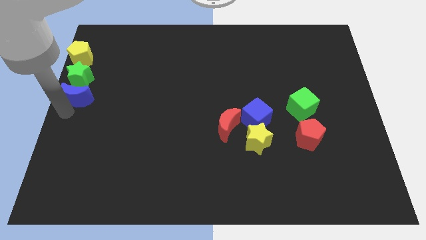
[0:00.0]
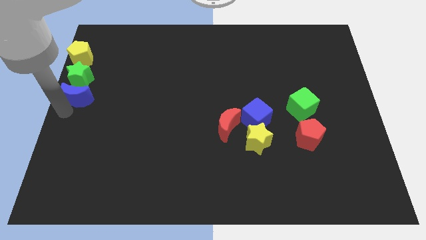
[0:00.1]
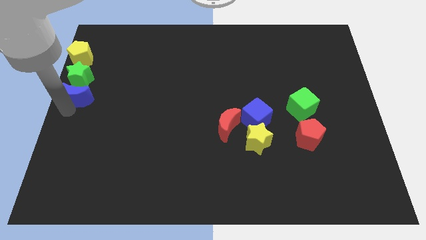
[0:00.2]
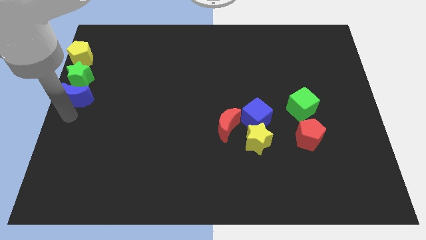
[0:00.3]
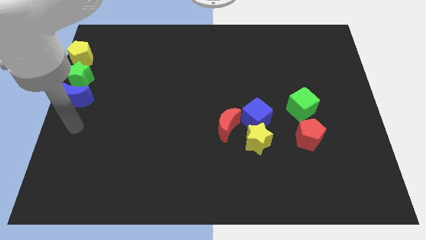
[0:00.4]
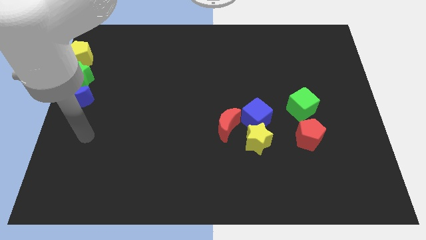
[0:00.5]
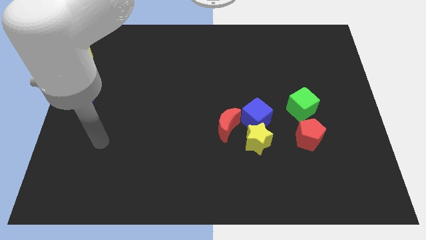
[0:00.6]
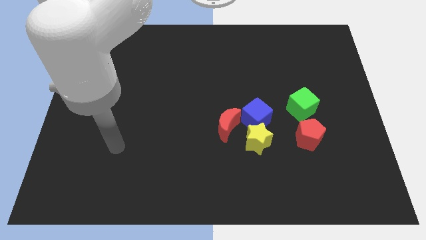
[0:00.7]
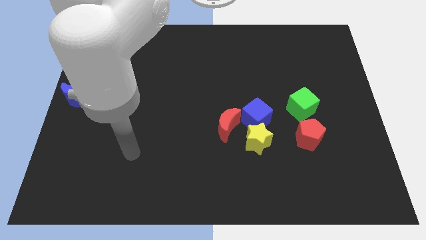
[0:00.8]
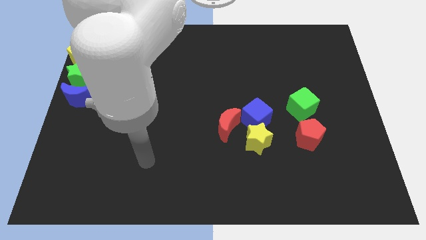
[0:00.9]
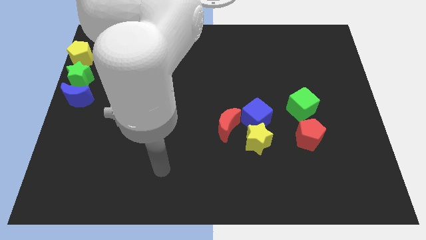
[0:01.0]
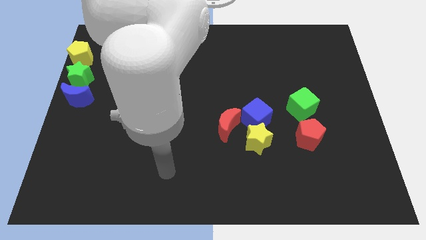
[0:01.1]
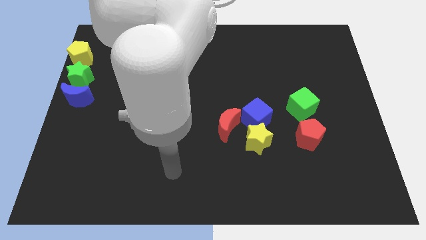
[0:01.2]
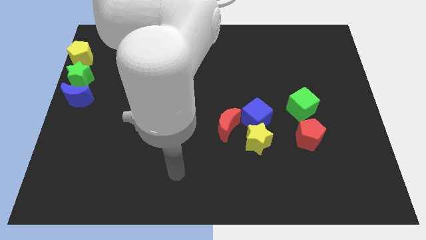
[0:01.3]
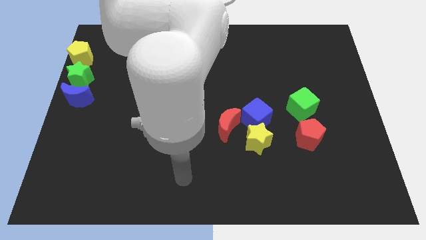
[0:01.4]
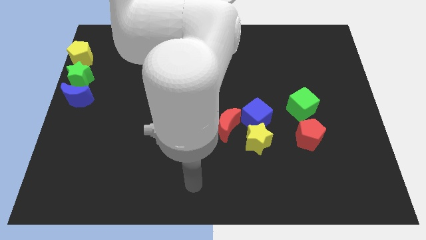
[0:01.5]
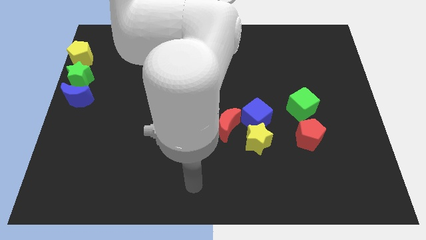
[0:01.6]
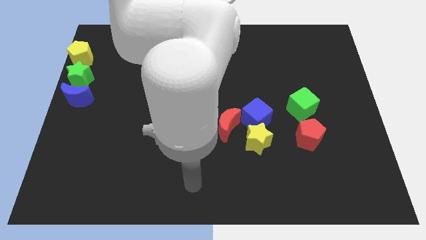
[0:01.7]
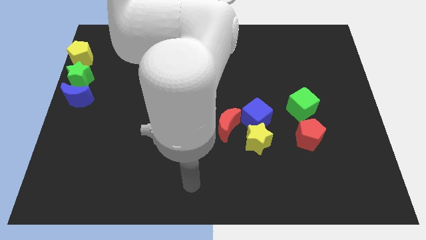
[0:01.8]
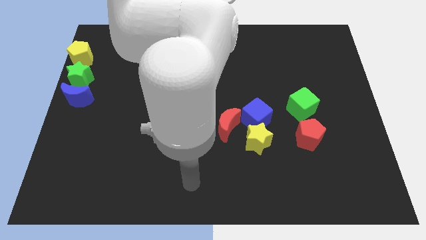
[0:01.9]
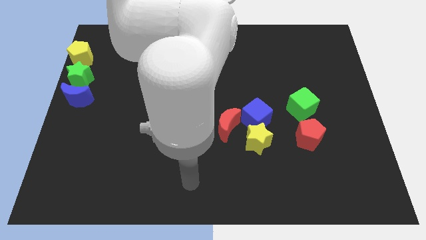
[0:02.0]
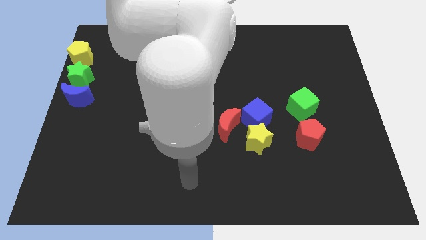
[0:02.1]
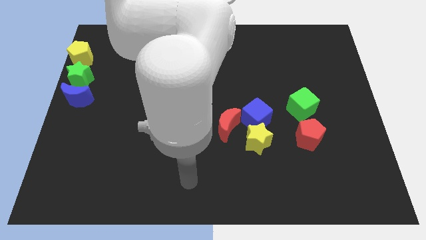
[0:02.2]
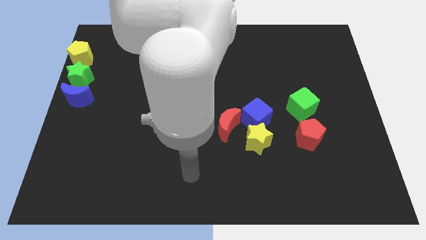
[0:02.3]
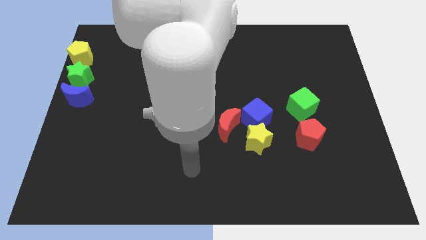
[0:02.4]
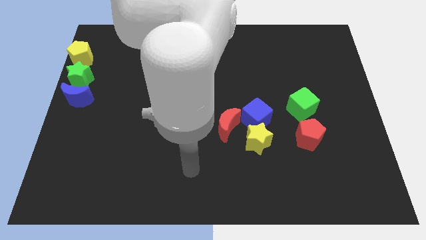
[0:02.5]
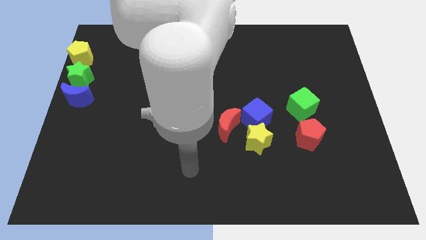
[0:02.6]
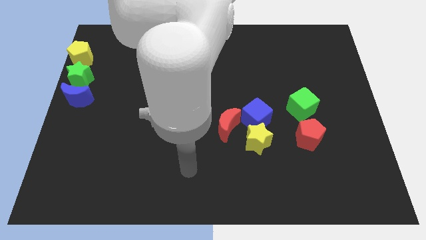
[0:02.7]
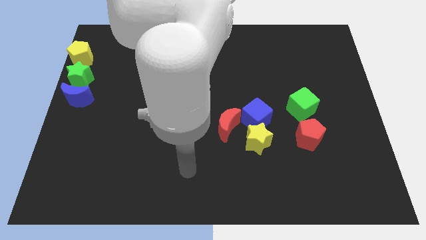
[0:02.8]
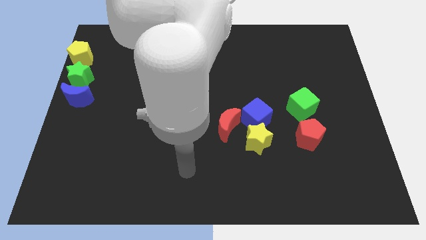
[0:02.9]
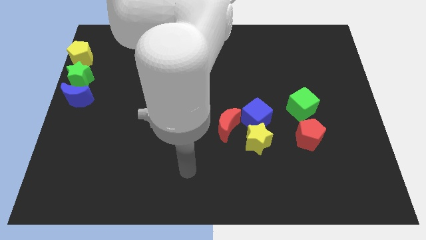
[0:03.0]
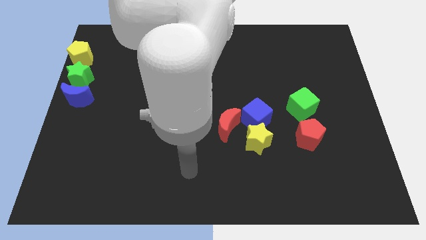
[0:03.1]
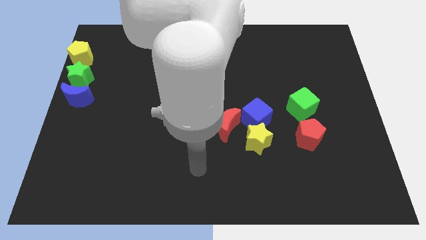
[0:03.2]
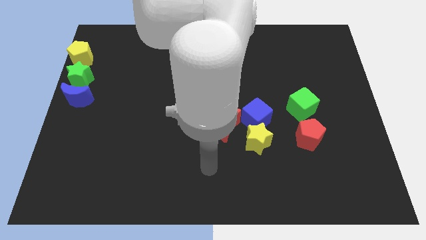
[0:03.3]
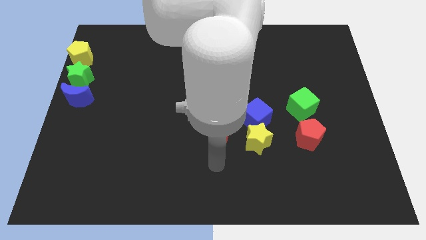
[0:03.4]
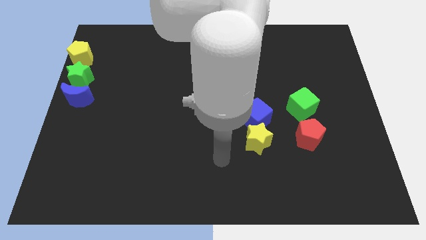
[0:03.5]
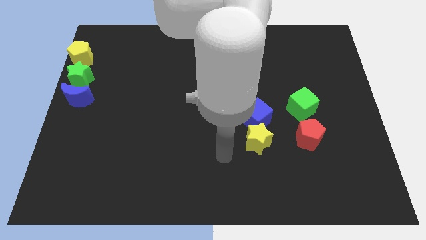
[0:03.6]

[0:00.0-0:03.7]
move your arm to the bottom of the red crescent

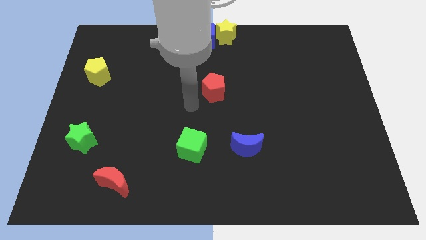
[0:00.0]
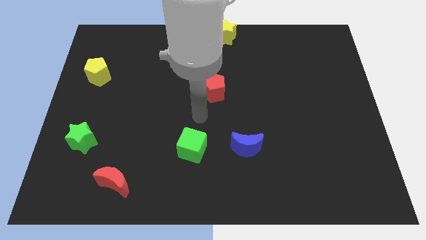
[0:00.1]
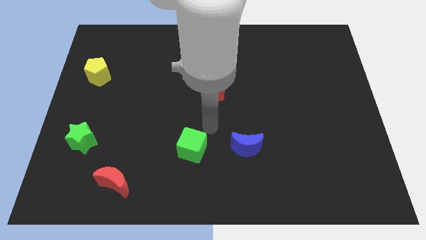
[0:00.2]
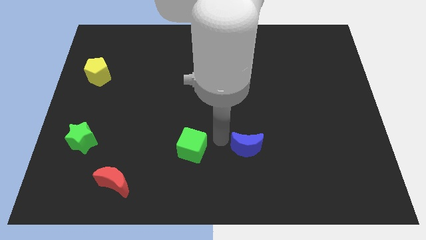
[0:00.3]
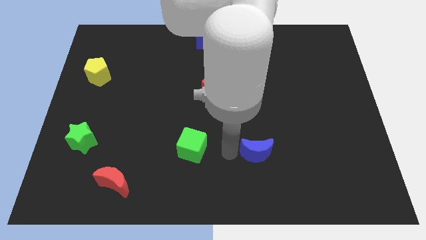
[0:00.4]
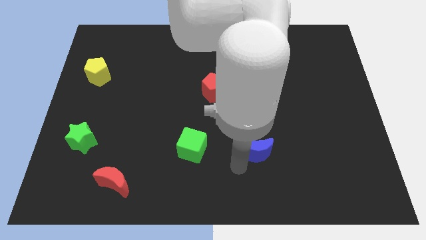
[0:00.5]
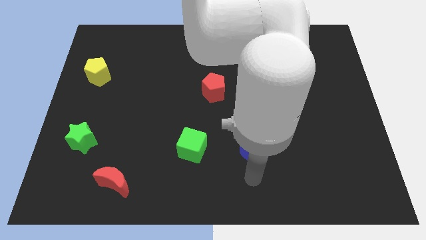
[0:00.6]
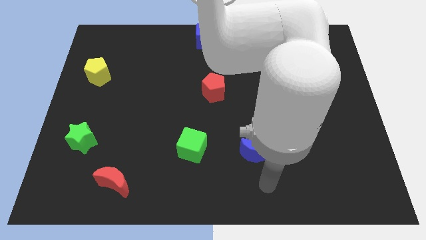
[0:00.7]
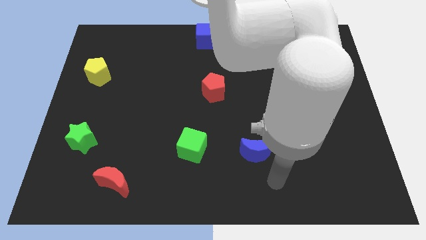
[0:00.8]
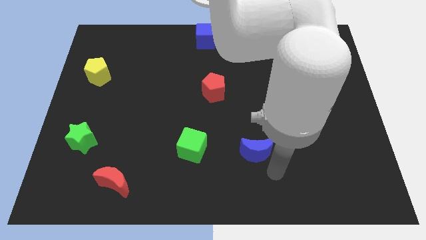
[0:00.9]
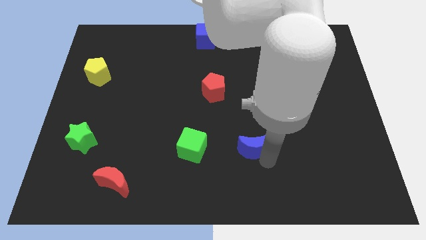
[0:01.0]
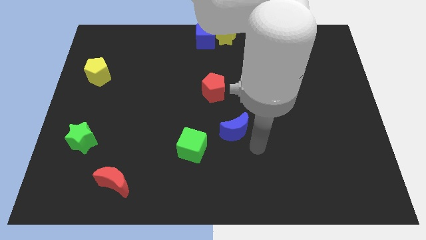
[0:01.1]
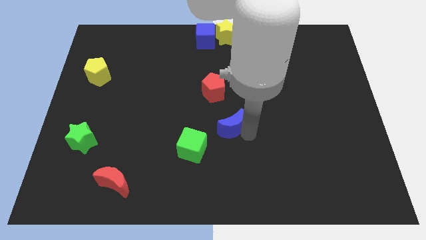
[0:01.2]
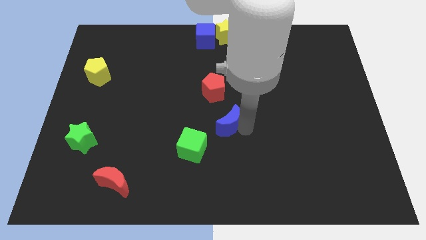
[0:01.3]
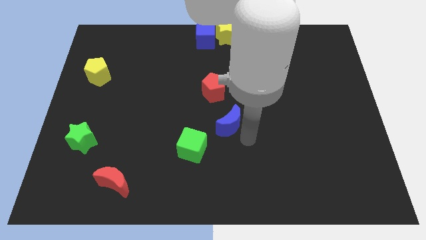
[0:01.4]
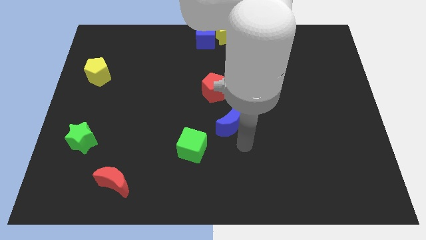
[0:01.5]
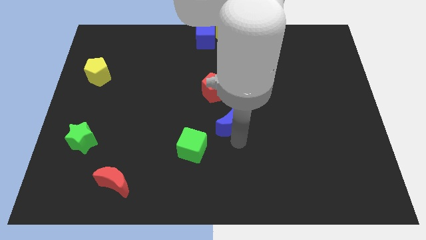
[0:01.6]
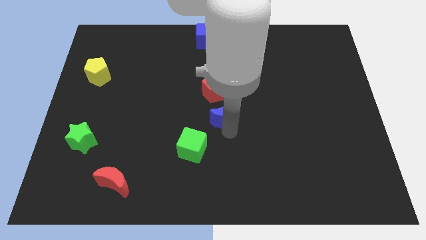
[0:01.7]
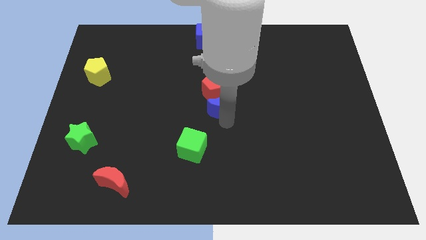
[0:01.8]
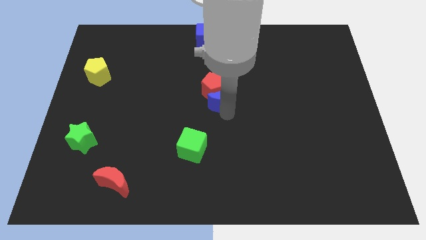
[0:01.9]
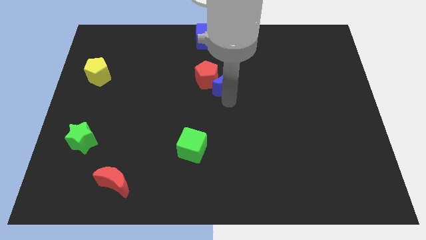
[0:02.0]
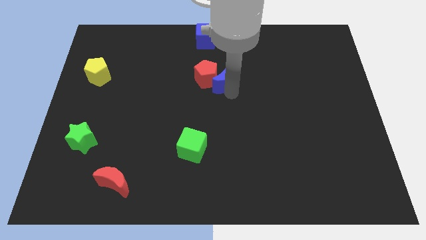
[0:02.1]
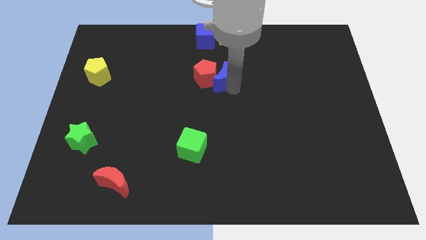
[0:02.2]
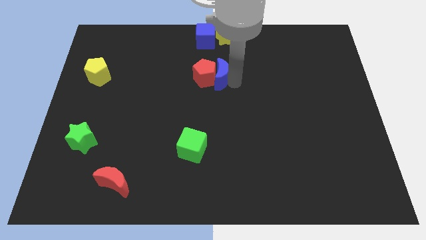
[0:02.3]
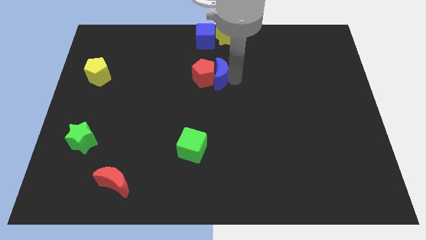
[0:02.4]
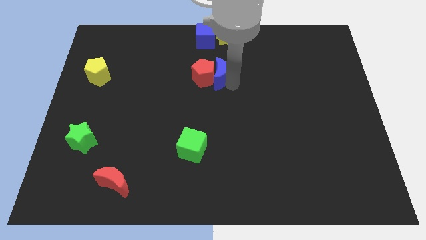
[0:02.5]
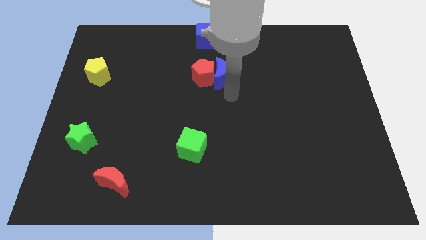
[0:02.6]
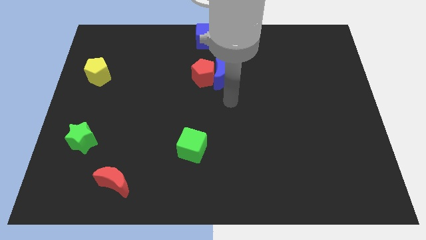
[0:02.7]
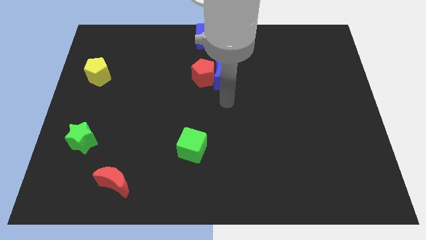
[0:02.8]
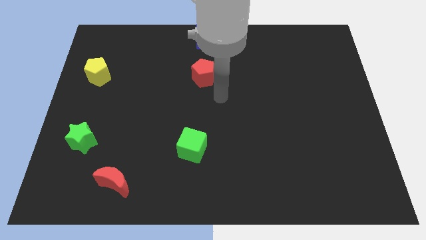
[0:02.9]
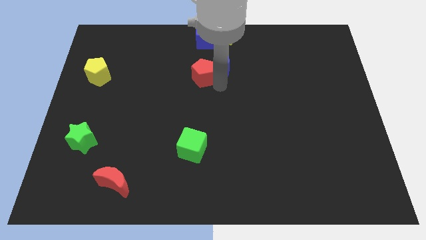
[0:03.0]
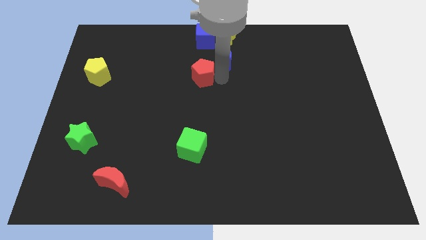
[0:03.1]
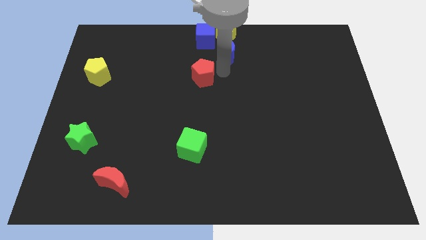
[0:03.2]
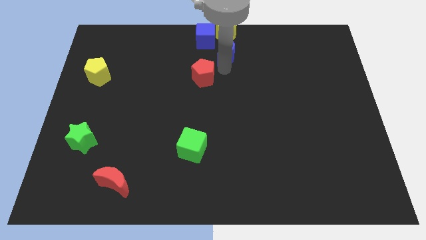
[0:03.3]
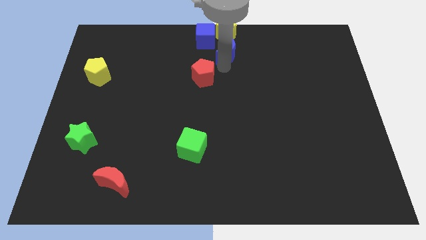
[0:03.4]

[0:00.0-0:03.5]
move the blue moon to the bottom of the yellow star

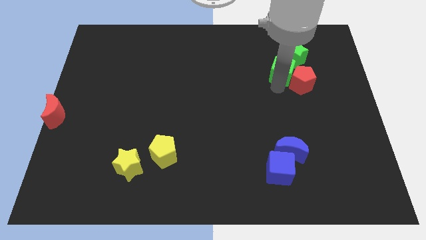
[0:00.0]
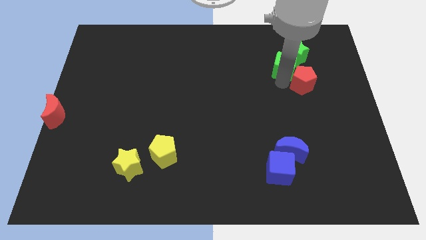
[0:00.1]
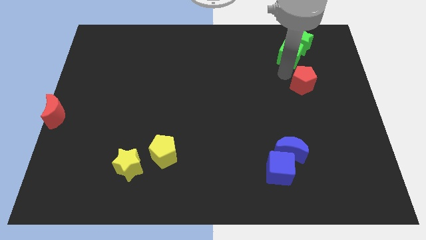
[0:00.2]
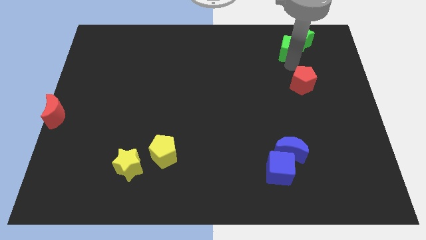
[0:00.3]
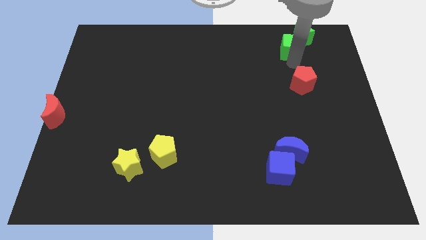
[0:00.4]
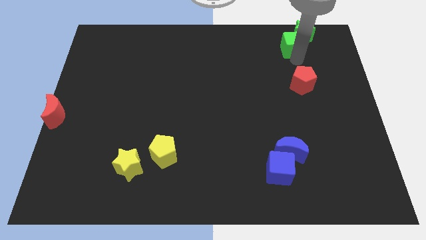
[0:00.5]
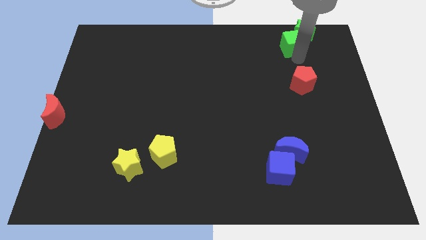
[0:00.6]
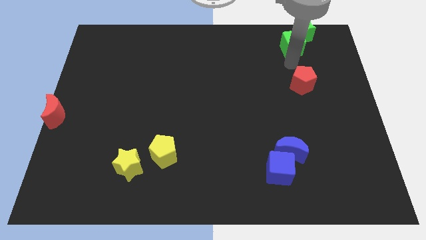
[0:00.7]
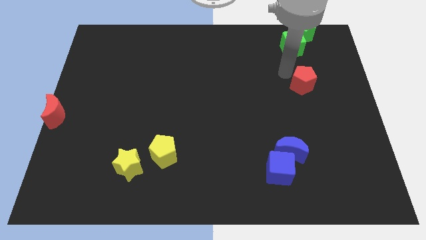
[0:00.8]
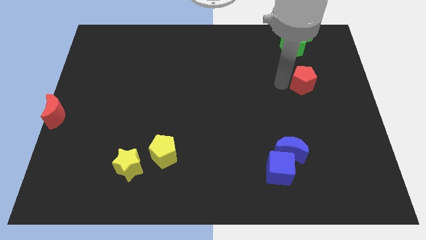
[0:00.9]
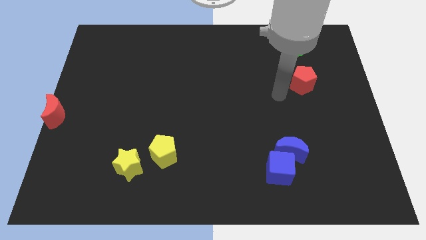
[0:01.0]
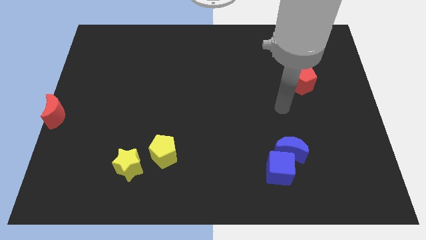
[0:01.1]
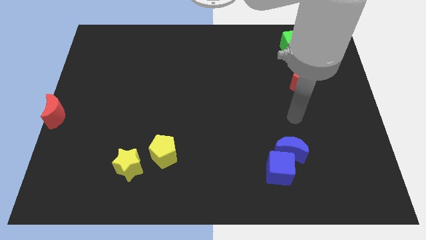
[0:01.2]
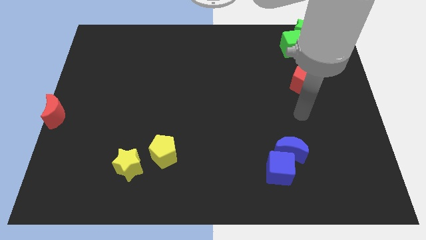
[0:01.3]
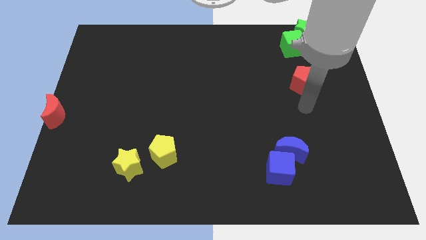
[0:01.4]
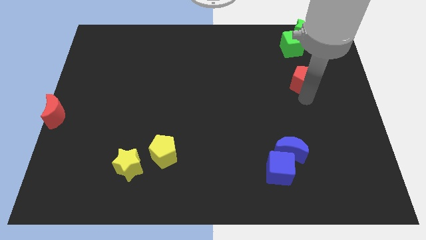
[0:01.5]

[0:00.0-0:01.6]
place your hand below the red pentagon

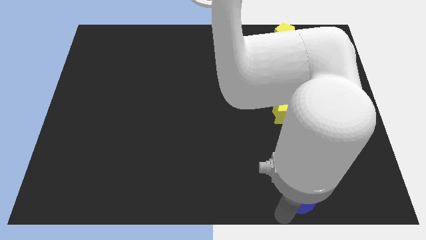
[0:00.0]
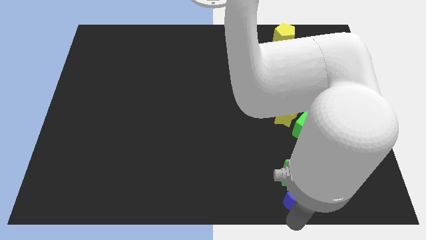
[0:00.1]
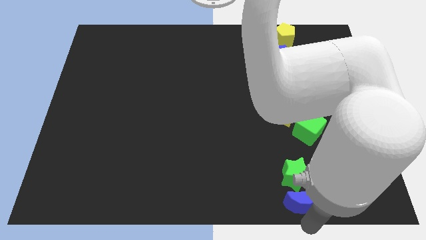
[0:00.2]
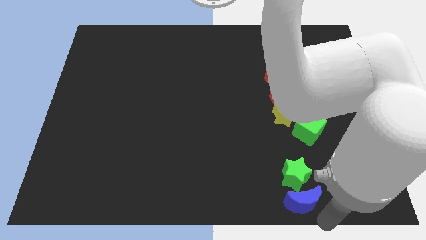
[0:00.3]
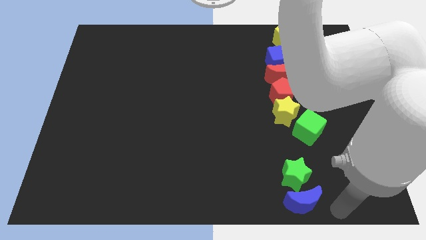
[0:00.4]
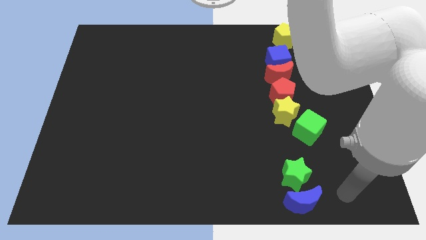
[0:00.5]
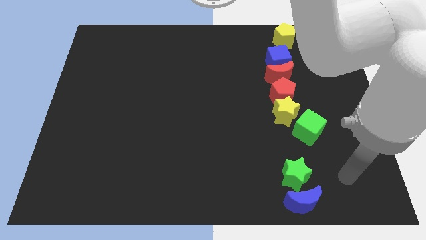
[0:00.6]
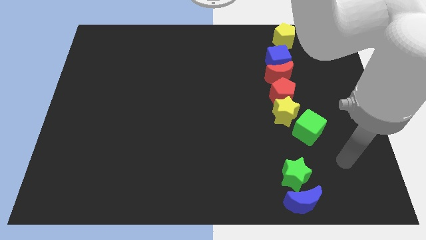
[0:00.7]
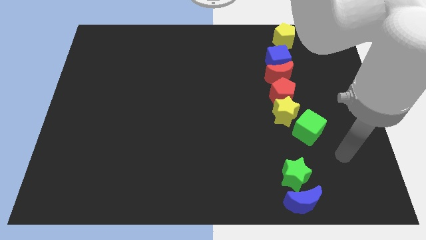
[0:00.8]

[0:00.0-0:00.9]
move the arm away from the blue moon
